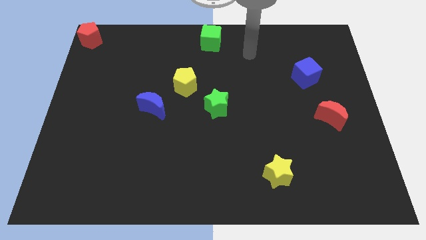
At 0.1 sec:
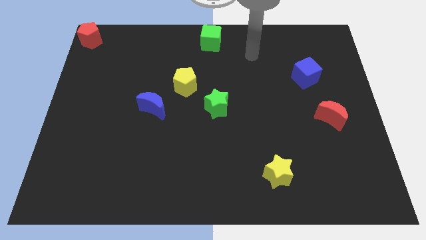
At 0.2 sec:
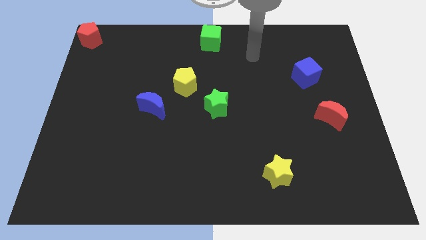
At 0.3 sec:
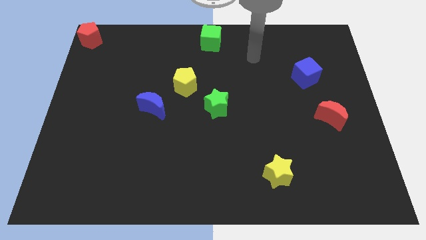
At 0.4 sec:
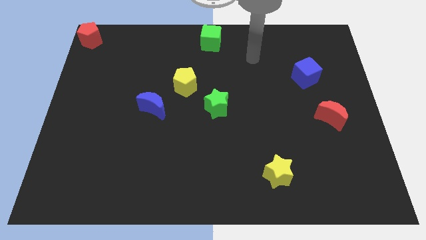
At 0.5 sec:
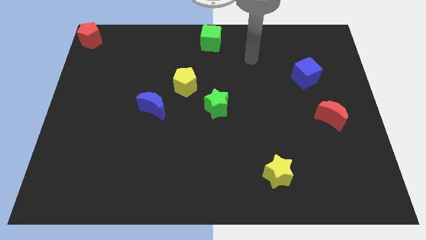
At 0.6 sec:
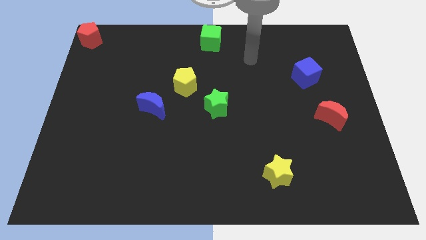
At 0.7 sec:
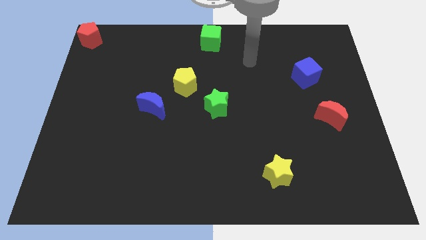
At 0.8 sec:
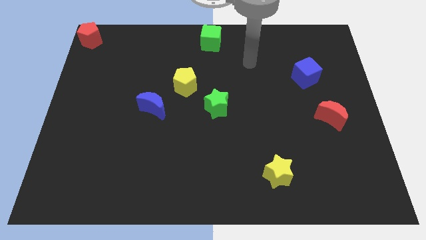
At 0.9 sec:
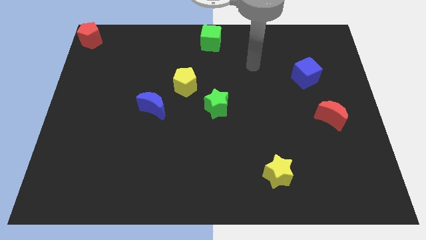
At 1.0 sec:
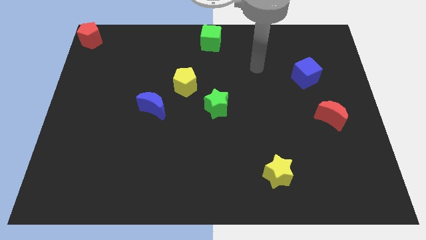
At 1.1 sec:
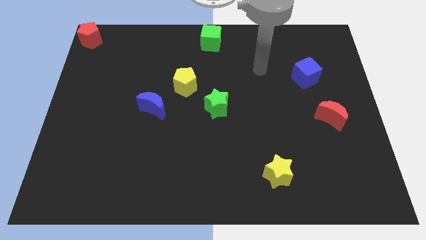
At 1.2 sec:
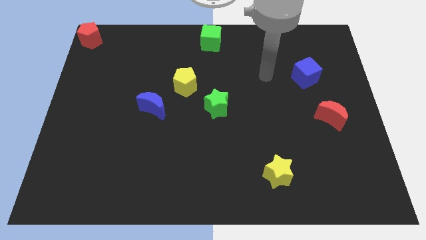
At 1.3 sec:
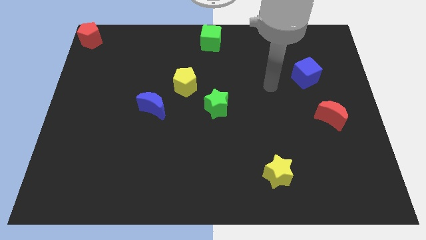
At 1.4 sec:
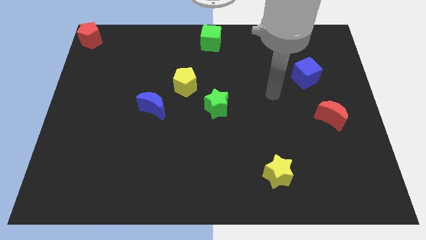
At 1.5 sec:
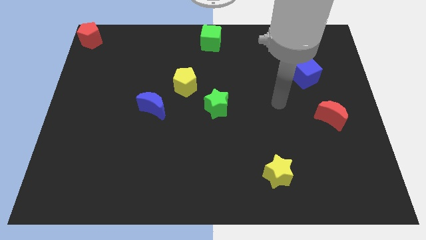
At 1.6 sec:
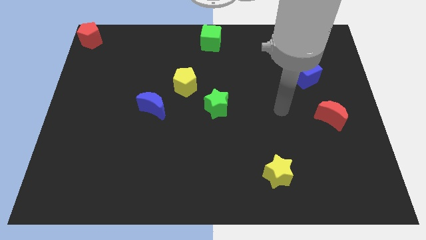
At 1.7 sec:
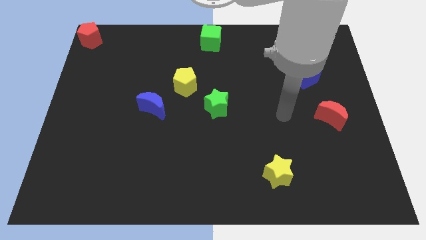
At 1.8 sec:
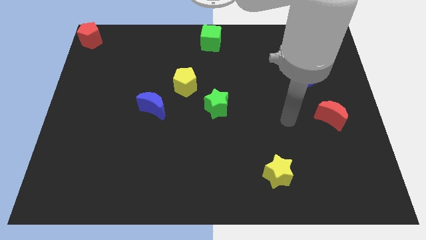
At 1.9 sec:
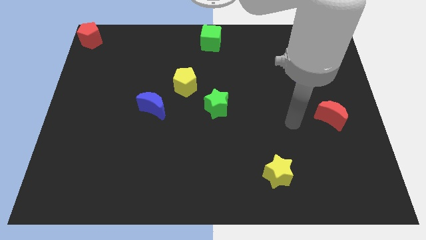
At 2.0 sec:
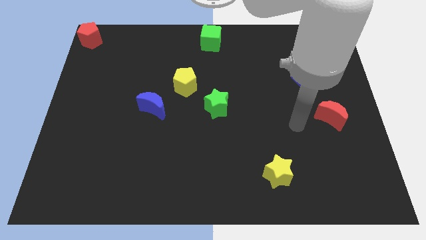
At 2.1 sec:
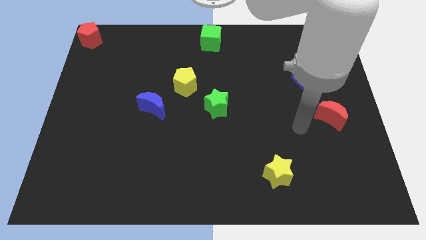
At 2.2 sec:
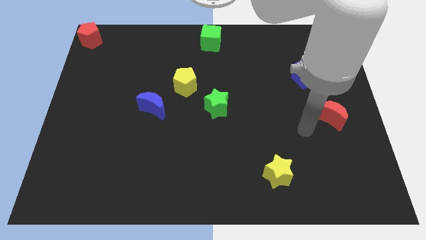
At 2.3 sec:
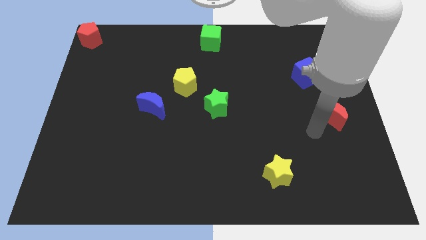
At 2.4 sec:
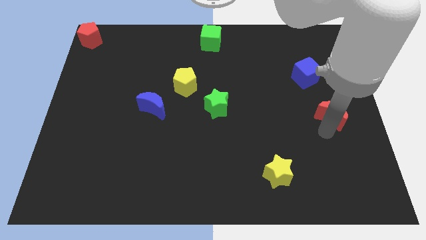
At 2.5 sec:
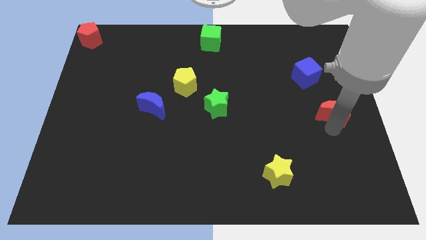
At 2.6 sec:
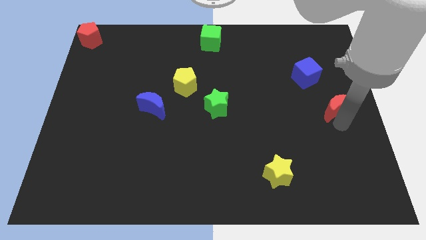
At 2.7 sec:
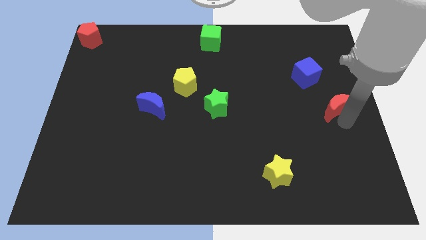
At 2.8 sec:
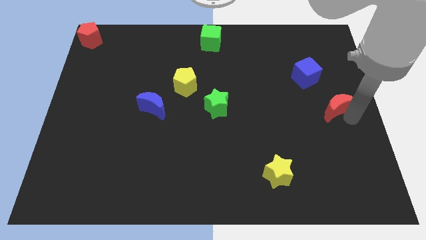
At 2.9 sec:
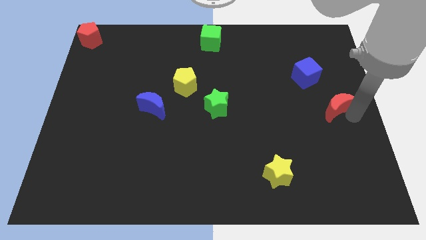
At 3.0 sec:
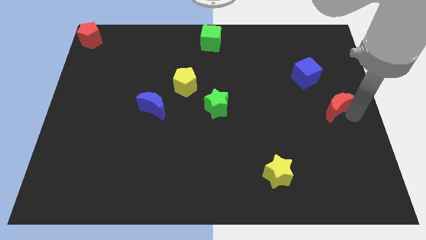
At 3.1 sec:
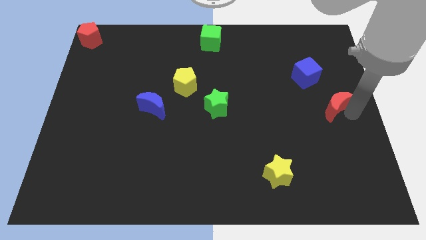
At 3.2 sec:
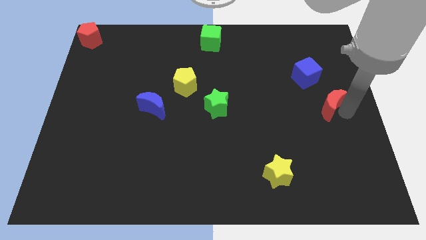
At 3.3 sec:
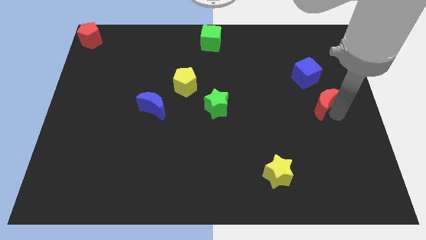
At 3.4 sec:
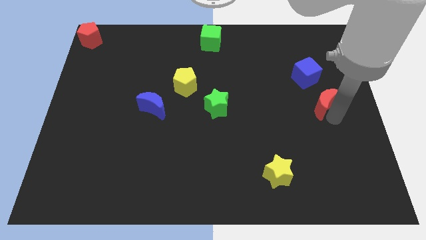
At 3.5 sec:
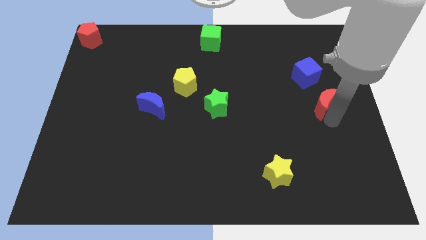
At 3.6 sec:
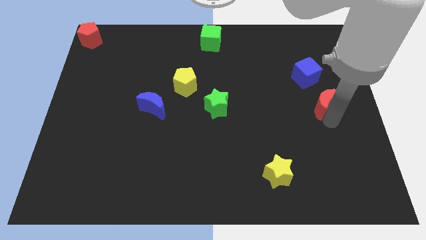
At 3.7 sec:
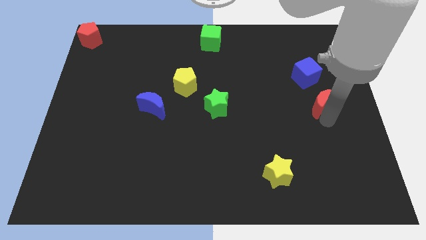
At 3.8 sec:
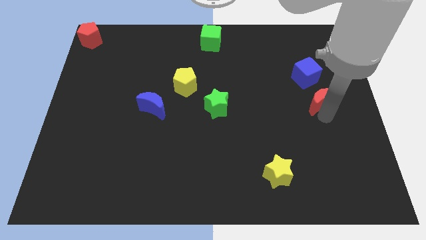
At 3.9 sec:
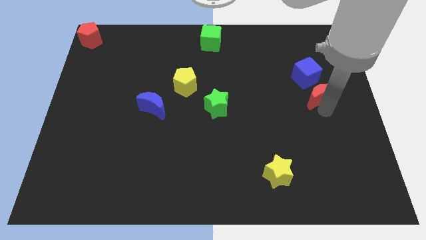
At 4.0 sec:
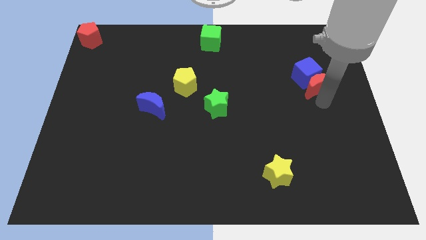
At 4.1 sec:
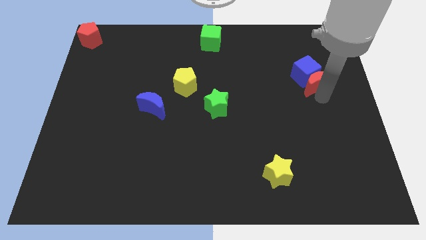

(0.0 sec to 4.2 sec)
push the red moon to the bottom side of the blue cube

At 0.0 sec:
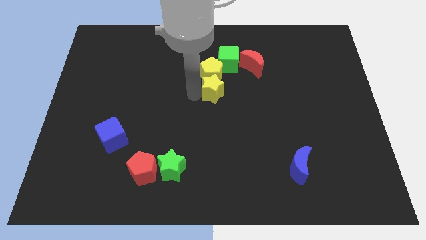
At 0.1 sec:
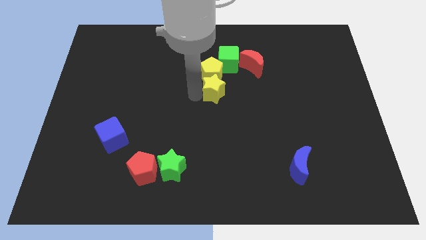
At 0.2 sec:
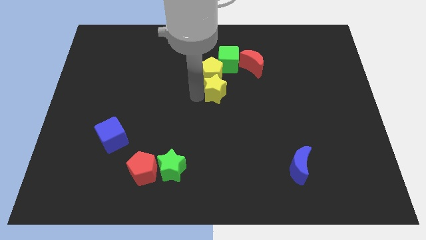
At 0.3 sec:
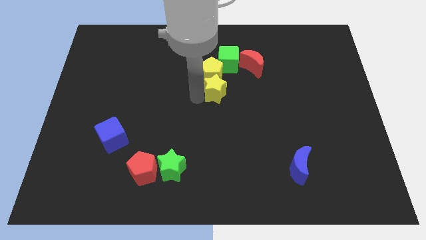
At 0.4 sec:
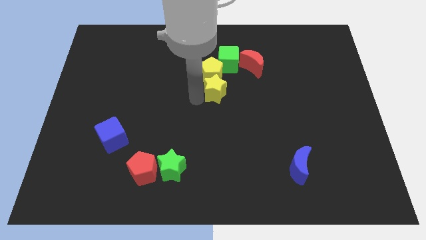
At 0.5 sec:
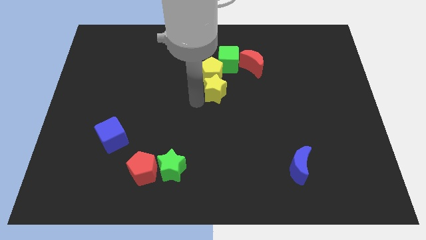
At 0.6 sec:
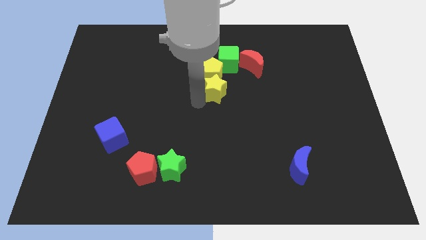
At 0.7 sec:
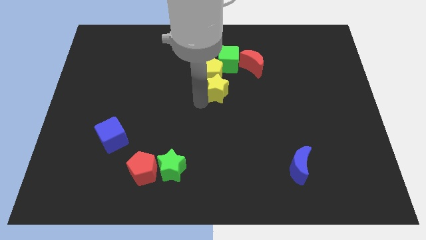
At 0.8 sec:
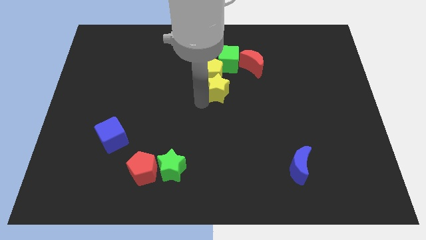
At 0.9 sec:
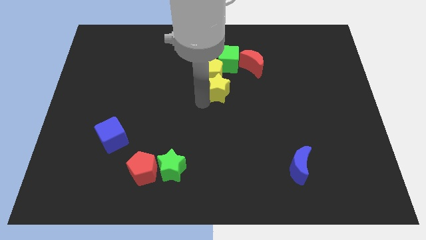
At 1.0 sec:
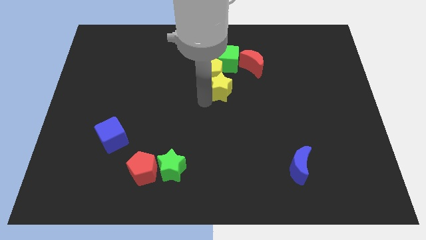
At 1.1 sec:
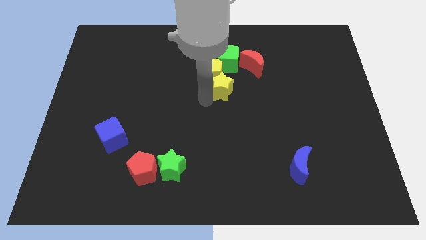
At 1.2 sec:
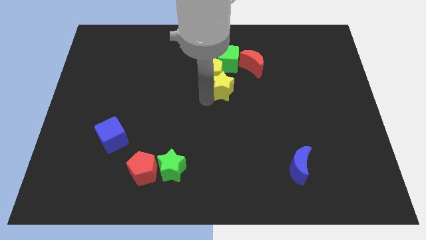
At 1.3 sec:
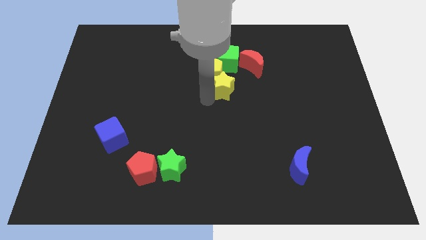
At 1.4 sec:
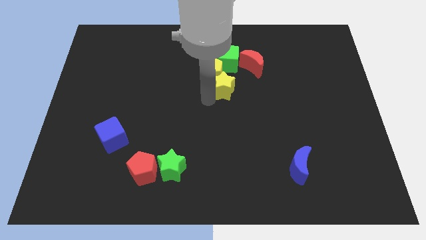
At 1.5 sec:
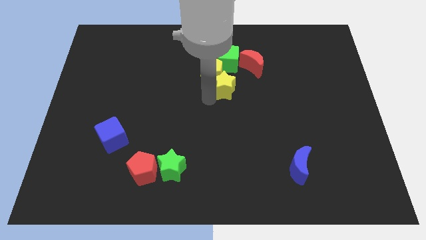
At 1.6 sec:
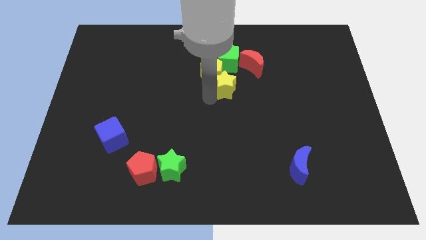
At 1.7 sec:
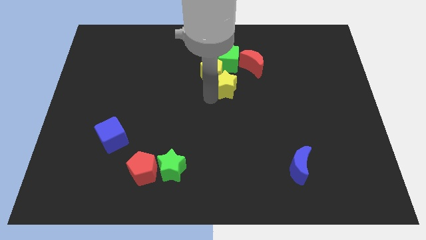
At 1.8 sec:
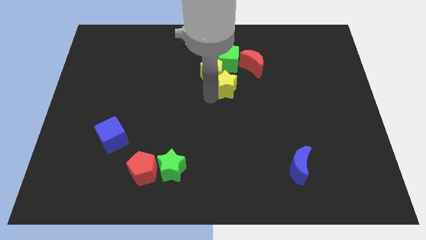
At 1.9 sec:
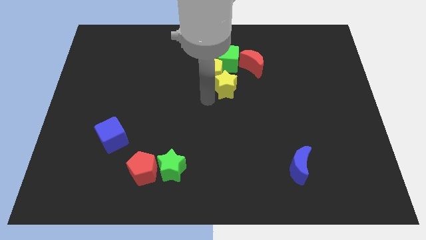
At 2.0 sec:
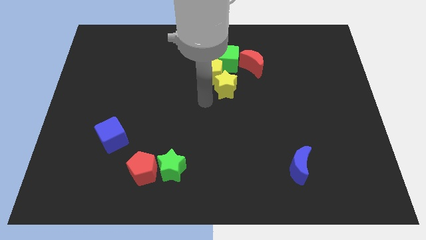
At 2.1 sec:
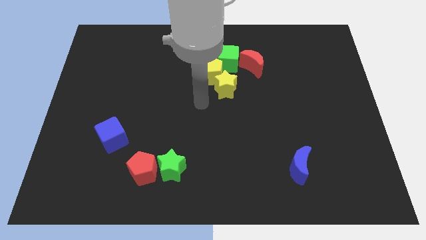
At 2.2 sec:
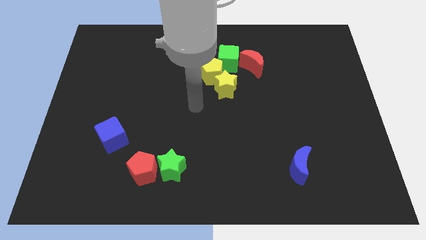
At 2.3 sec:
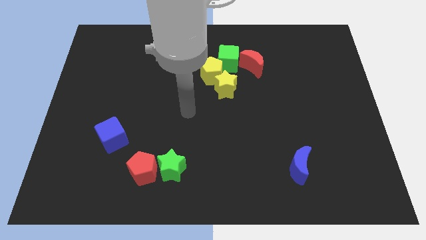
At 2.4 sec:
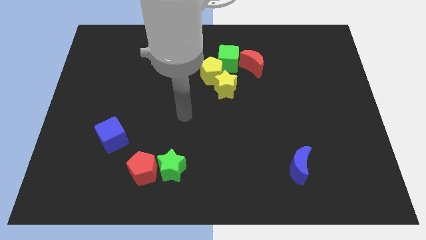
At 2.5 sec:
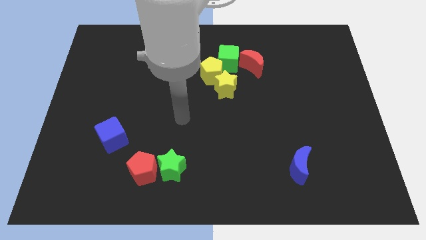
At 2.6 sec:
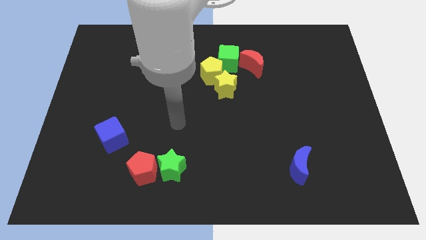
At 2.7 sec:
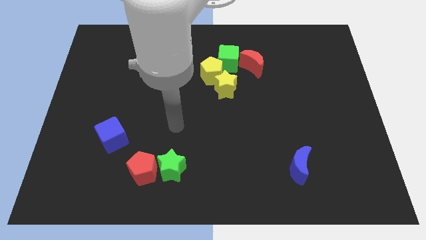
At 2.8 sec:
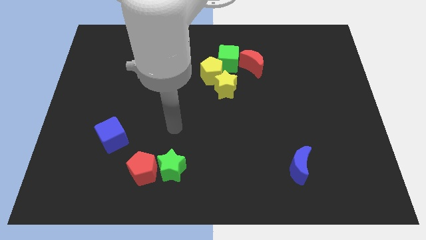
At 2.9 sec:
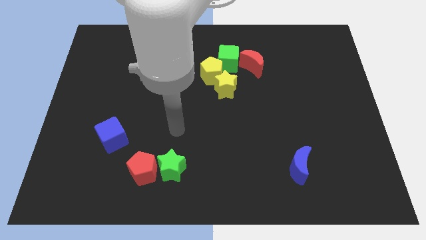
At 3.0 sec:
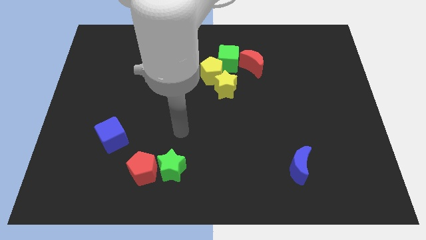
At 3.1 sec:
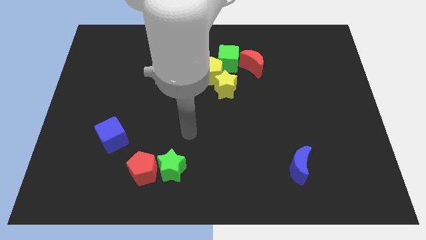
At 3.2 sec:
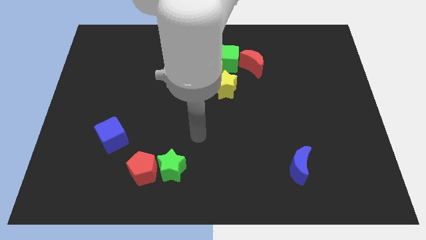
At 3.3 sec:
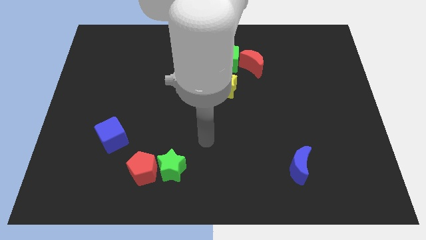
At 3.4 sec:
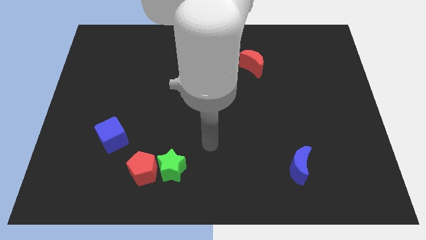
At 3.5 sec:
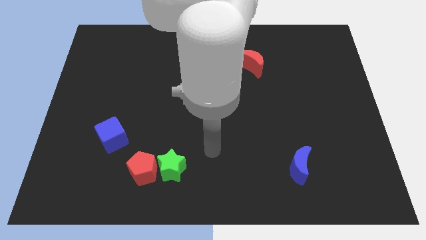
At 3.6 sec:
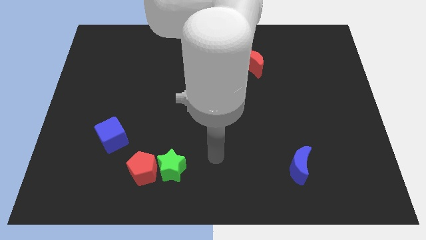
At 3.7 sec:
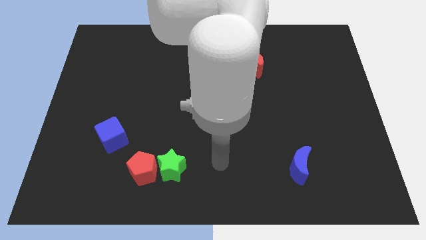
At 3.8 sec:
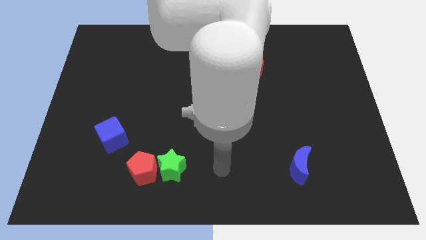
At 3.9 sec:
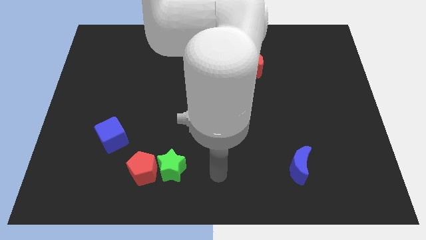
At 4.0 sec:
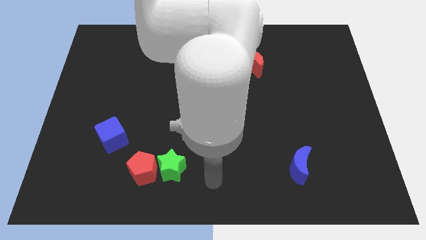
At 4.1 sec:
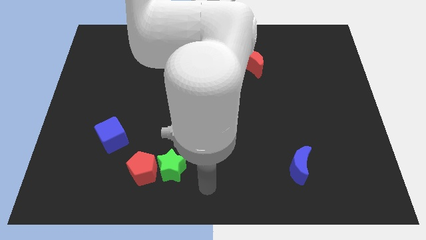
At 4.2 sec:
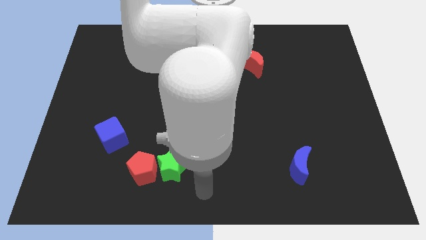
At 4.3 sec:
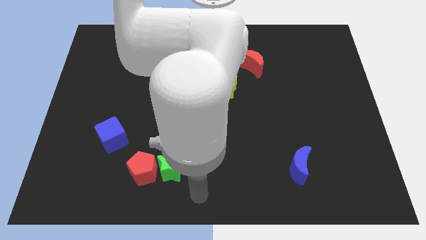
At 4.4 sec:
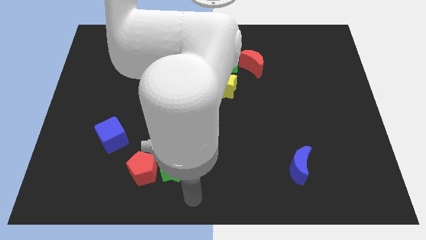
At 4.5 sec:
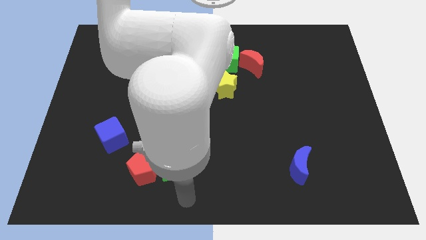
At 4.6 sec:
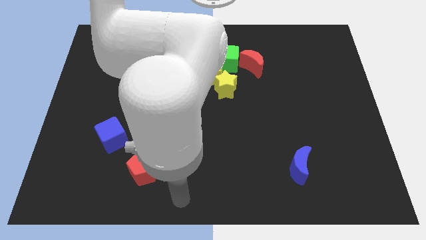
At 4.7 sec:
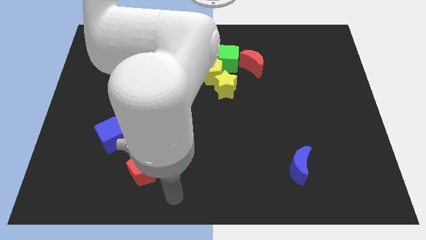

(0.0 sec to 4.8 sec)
slide the yellow star to the bottom right of the yellow pentagon
